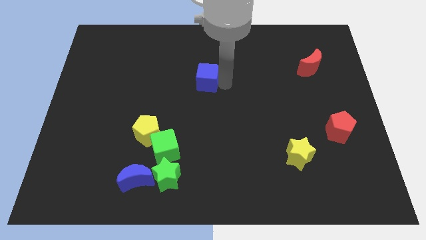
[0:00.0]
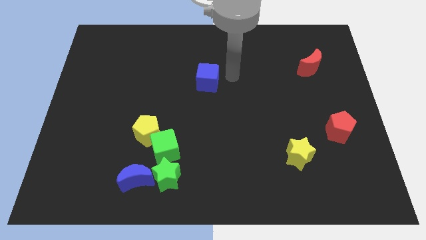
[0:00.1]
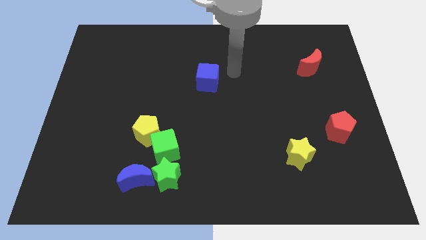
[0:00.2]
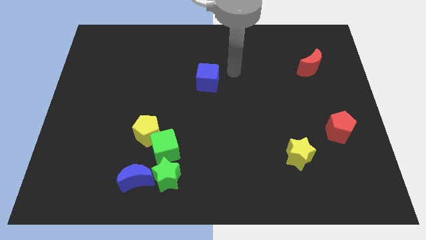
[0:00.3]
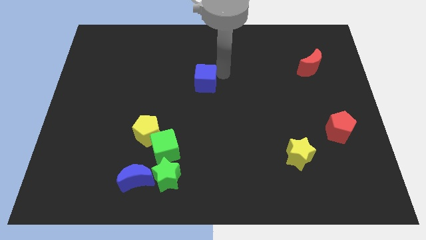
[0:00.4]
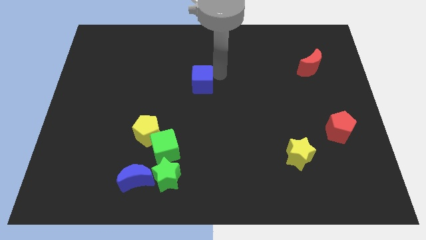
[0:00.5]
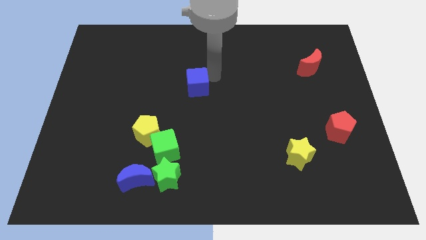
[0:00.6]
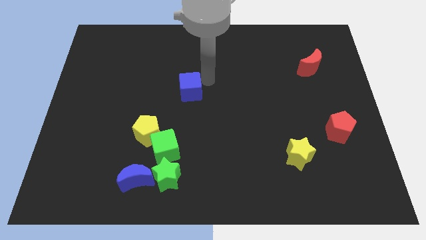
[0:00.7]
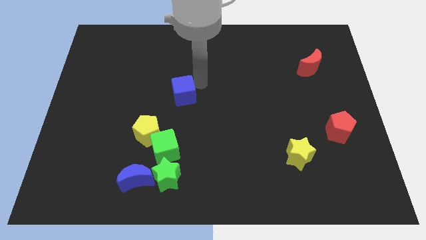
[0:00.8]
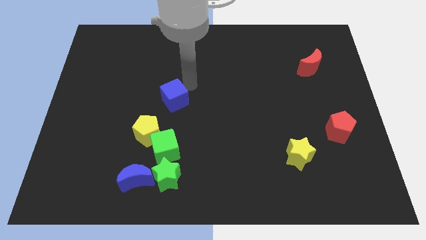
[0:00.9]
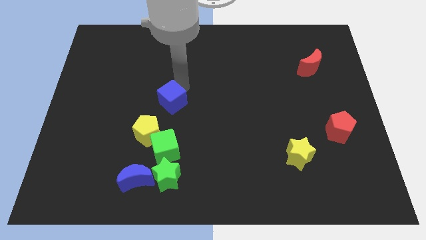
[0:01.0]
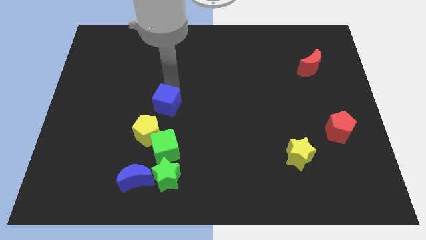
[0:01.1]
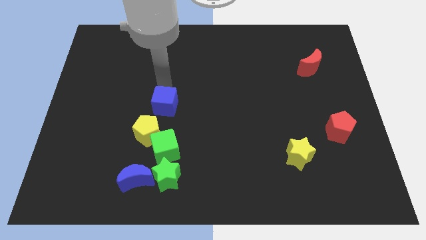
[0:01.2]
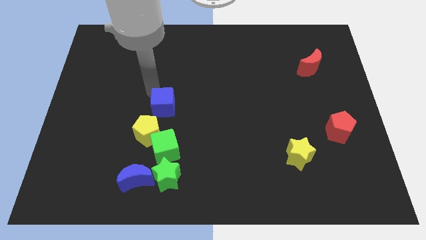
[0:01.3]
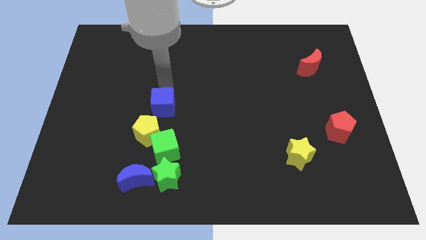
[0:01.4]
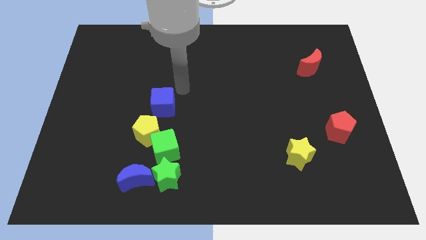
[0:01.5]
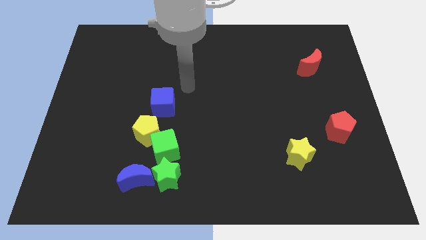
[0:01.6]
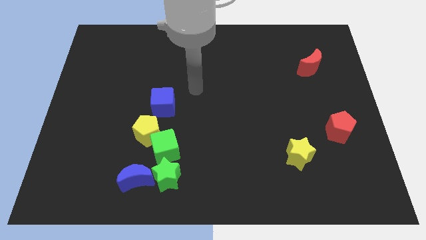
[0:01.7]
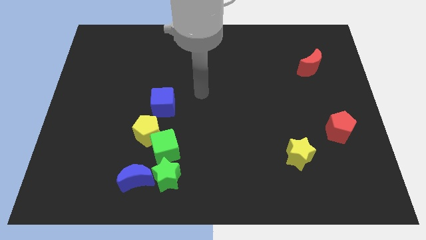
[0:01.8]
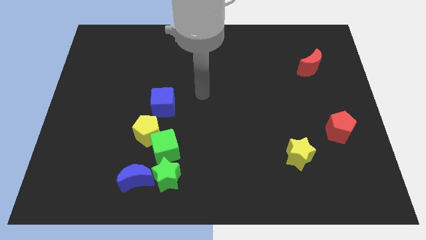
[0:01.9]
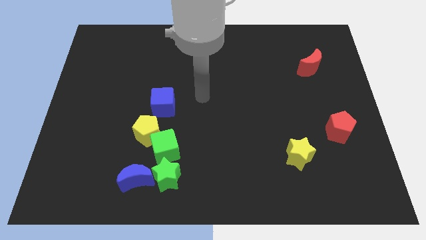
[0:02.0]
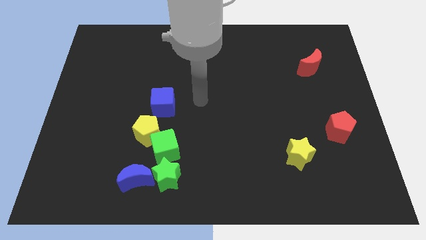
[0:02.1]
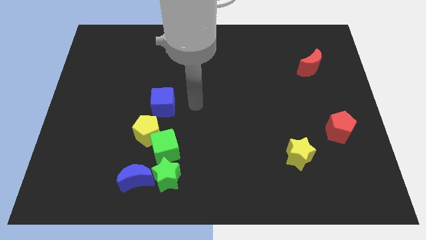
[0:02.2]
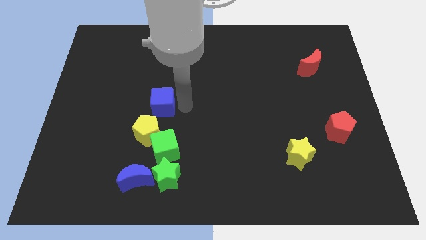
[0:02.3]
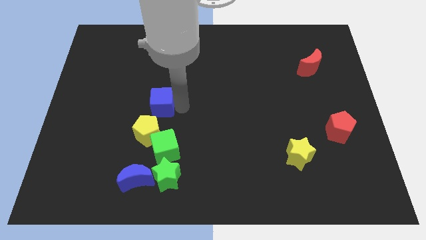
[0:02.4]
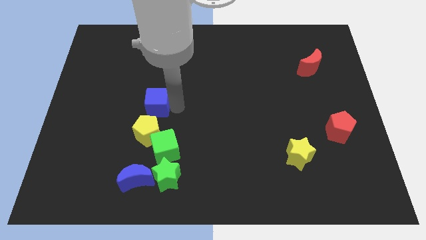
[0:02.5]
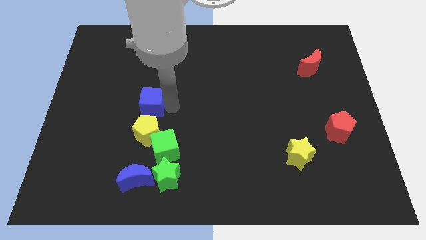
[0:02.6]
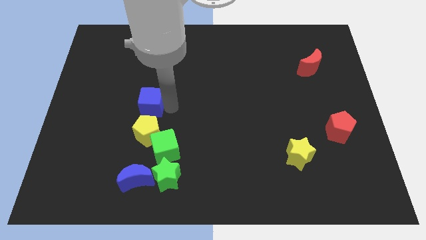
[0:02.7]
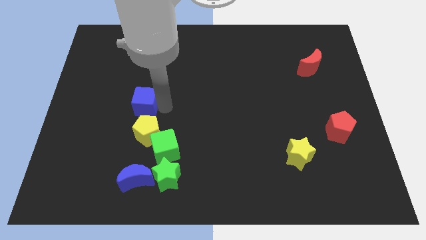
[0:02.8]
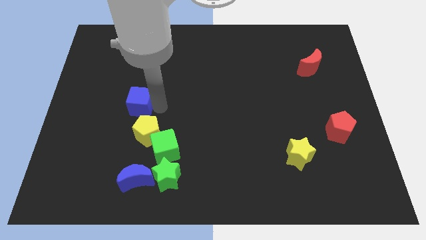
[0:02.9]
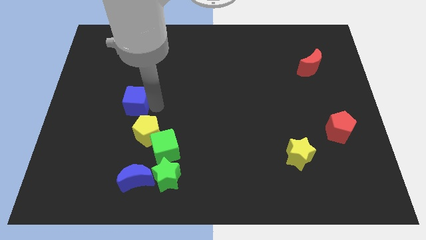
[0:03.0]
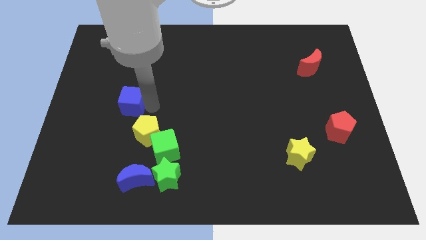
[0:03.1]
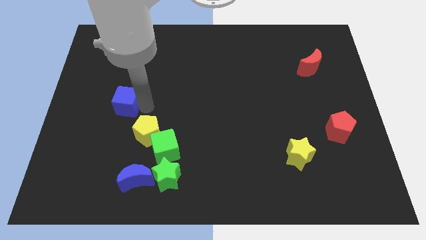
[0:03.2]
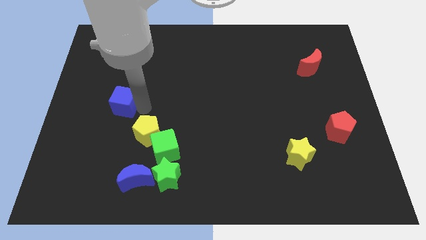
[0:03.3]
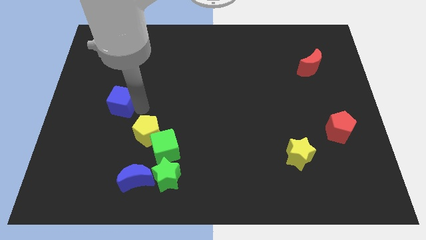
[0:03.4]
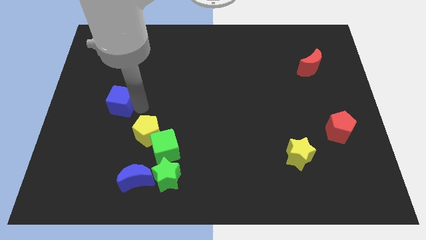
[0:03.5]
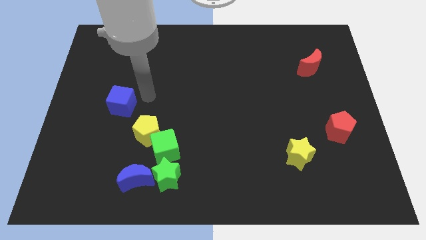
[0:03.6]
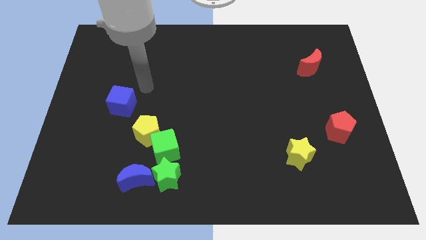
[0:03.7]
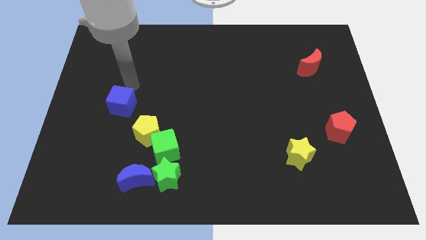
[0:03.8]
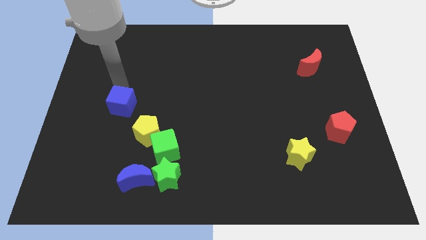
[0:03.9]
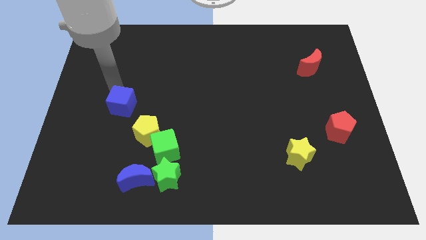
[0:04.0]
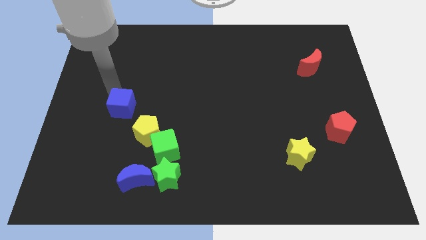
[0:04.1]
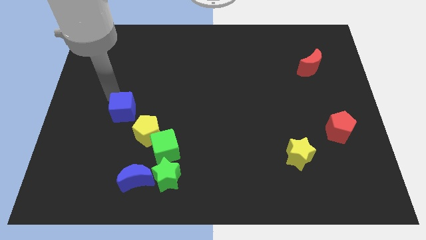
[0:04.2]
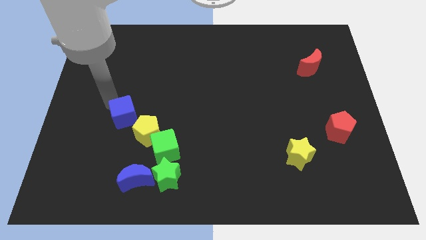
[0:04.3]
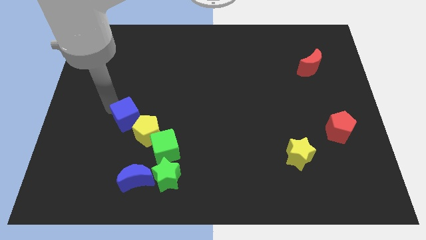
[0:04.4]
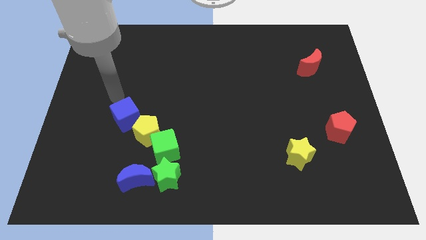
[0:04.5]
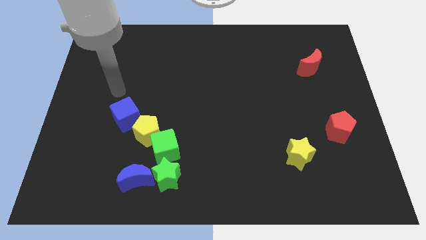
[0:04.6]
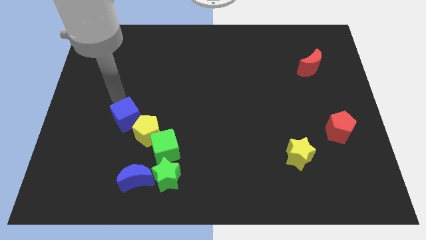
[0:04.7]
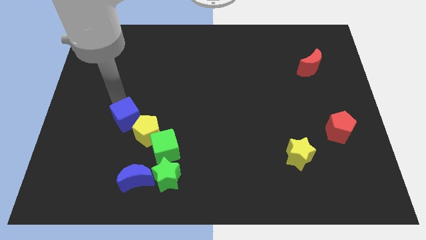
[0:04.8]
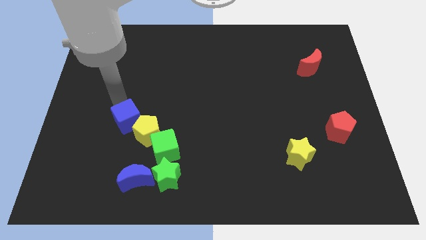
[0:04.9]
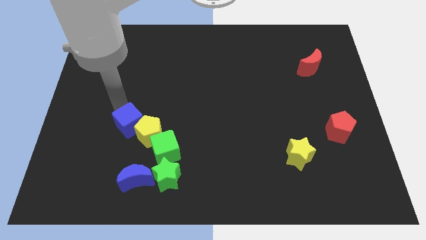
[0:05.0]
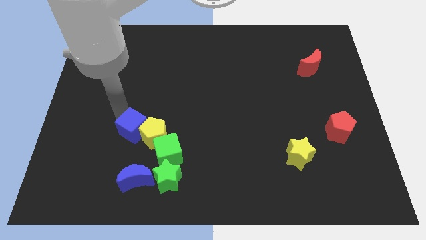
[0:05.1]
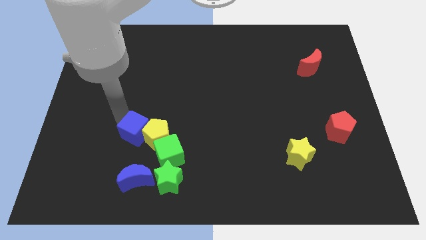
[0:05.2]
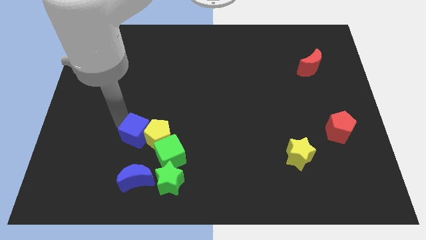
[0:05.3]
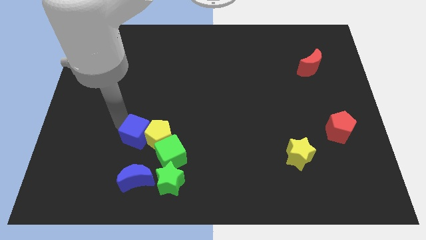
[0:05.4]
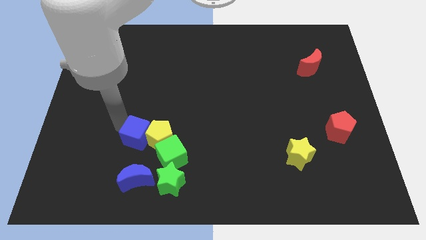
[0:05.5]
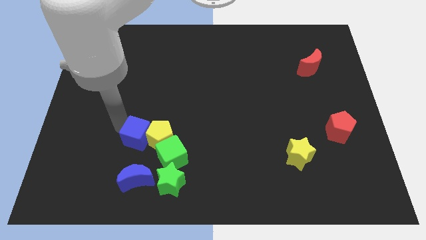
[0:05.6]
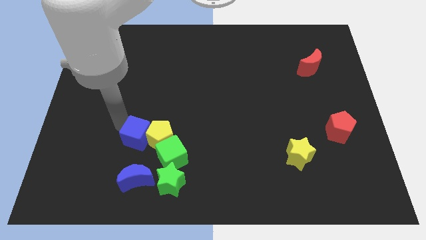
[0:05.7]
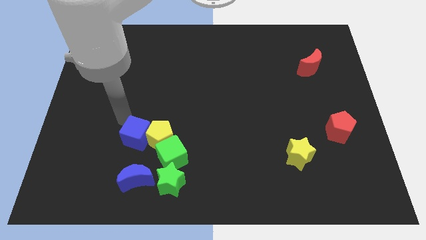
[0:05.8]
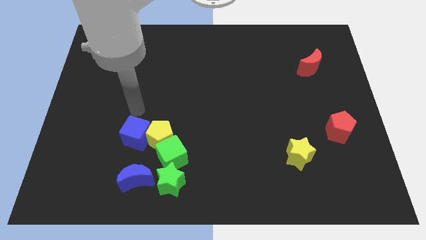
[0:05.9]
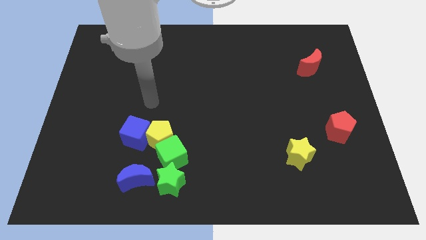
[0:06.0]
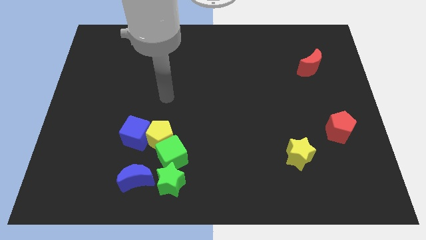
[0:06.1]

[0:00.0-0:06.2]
push the blue cube into the group of blocks

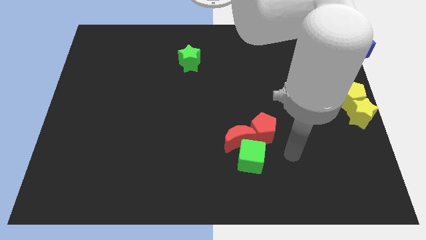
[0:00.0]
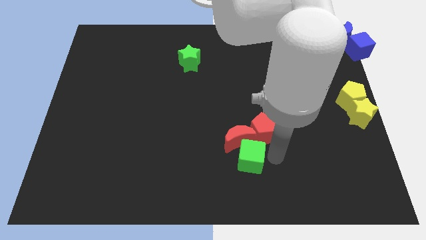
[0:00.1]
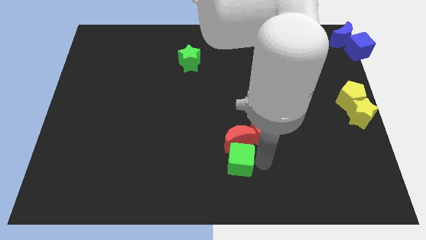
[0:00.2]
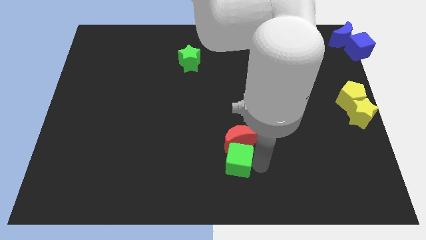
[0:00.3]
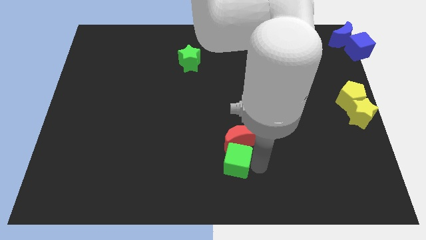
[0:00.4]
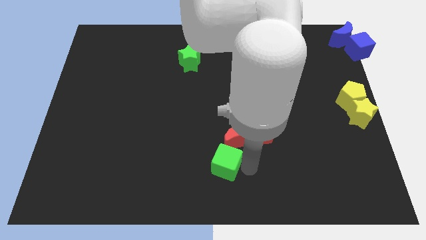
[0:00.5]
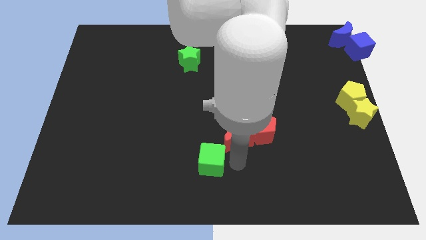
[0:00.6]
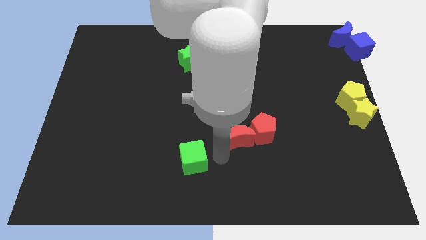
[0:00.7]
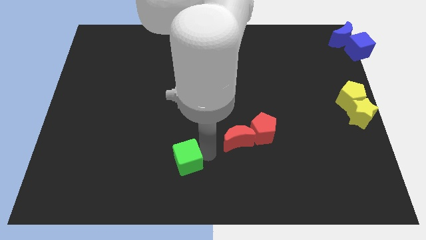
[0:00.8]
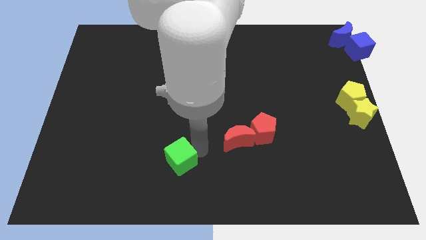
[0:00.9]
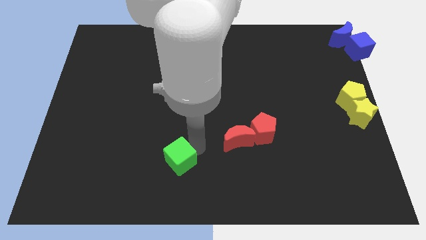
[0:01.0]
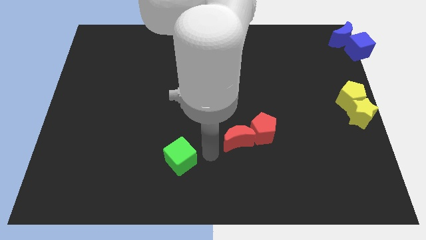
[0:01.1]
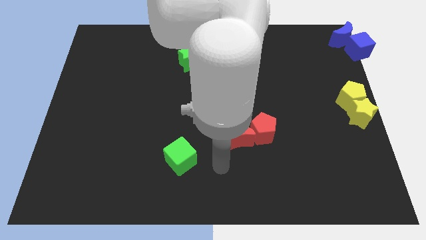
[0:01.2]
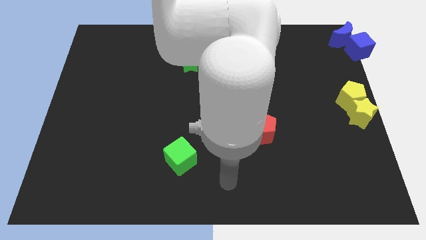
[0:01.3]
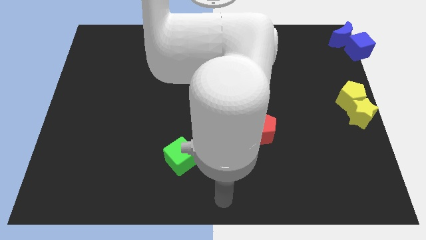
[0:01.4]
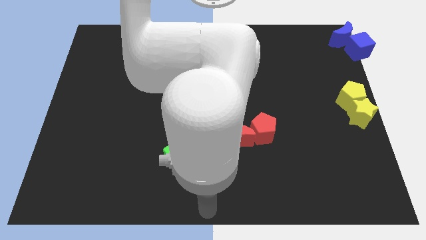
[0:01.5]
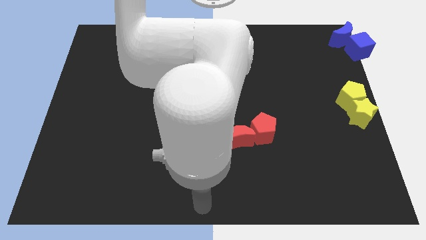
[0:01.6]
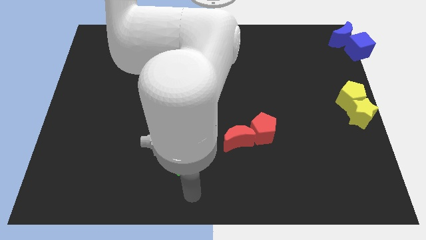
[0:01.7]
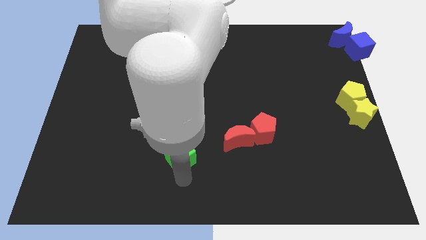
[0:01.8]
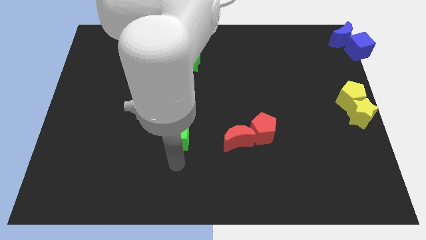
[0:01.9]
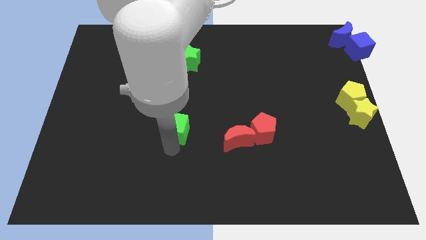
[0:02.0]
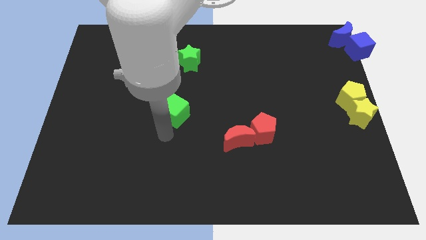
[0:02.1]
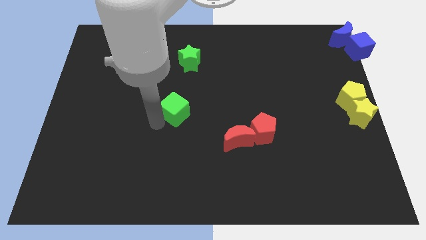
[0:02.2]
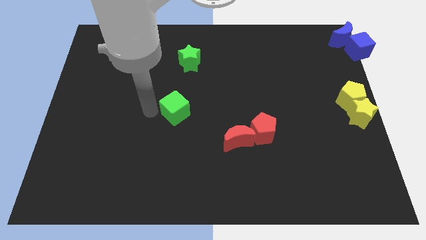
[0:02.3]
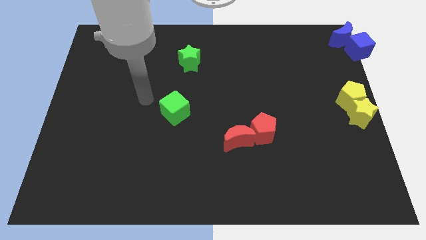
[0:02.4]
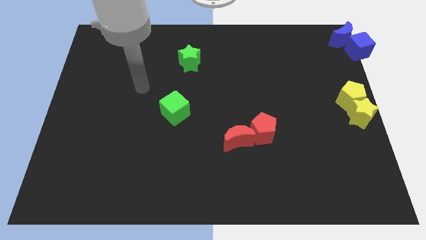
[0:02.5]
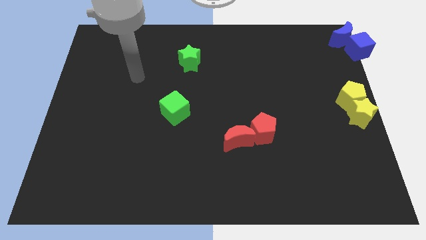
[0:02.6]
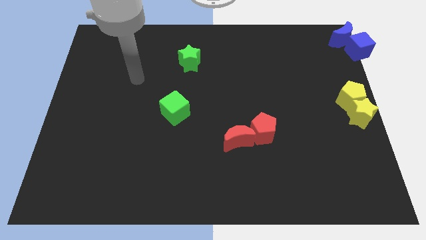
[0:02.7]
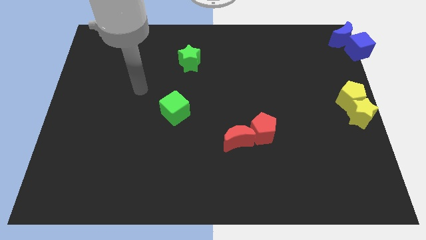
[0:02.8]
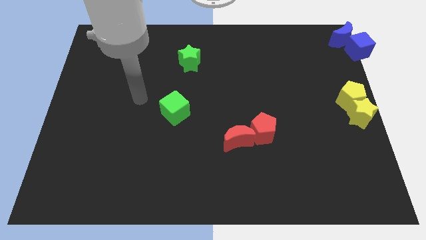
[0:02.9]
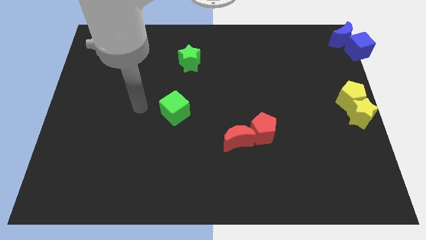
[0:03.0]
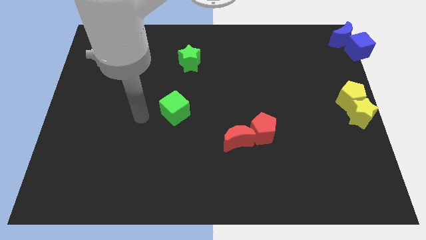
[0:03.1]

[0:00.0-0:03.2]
push the green cube to the bottom side of the green star
